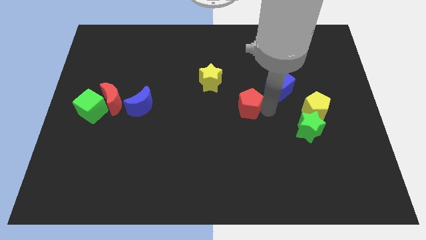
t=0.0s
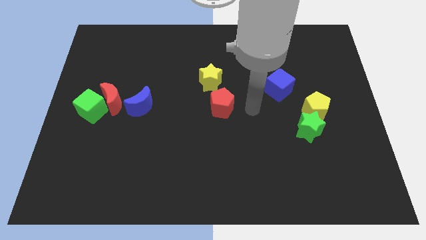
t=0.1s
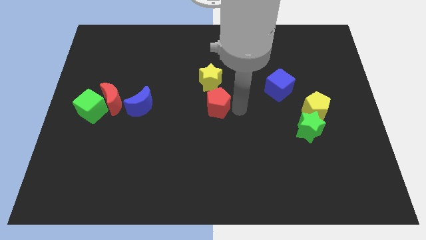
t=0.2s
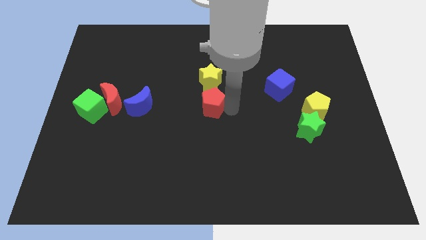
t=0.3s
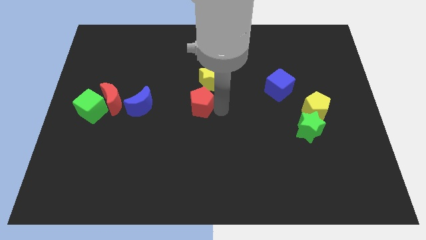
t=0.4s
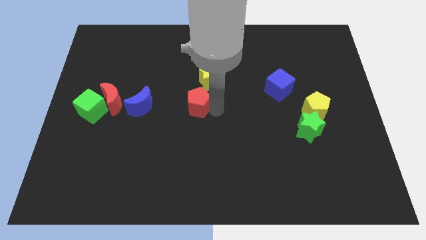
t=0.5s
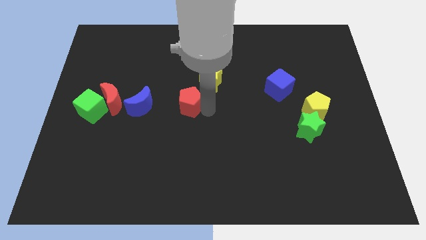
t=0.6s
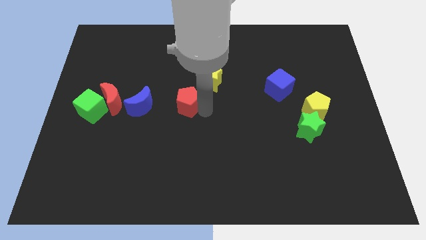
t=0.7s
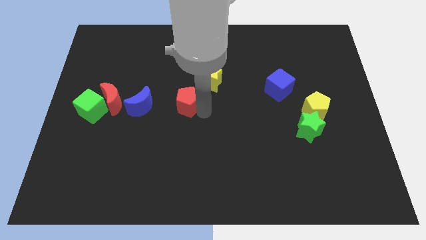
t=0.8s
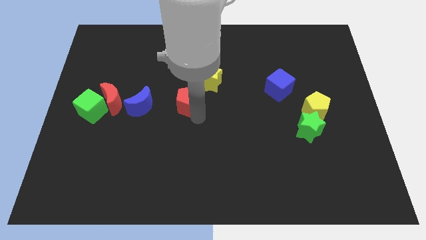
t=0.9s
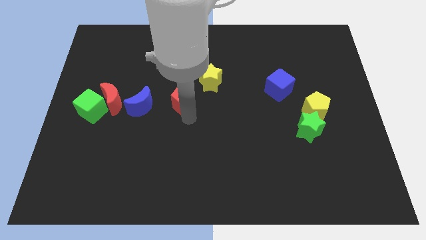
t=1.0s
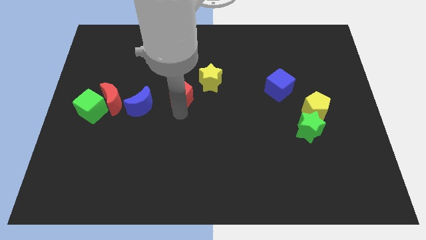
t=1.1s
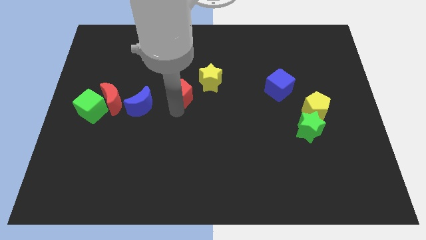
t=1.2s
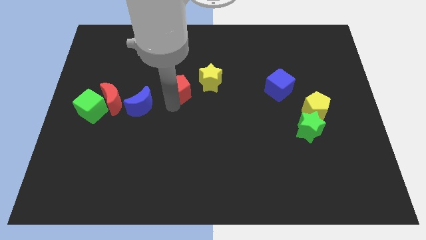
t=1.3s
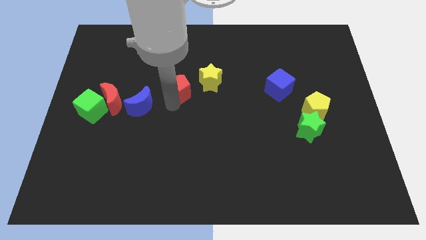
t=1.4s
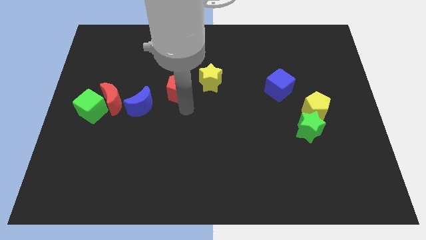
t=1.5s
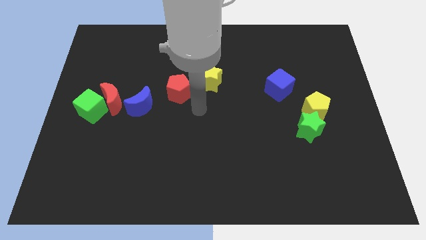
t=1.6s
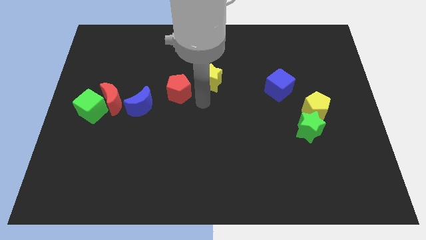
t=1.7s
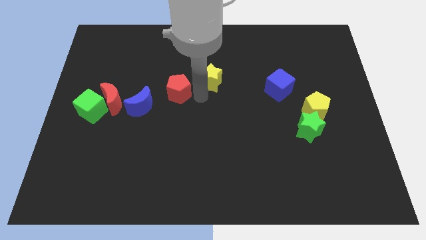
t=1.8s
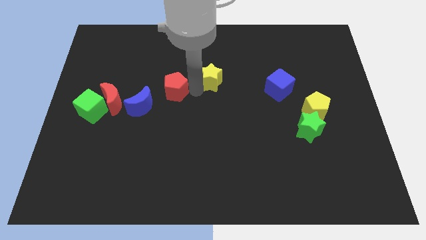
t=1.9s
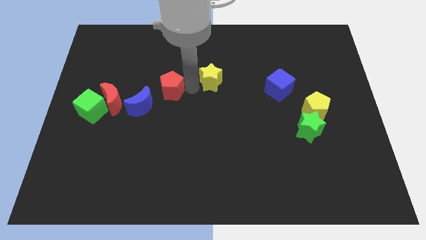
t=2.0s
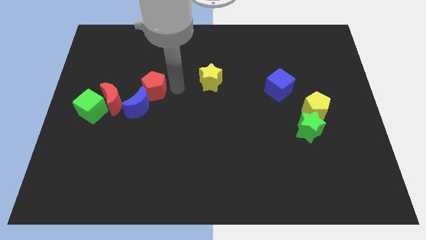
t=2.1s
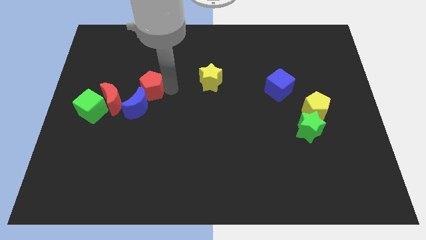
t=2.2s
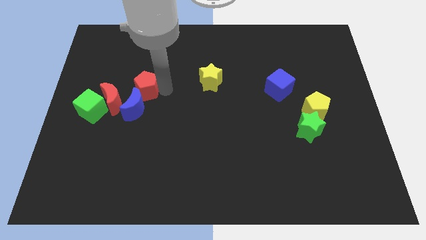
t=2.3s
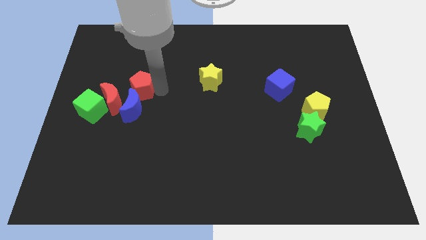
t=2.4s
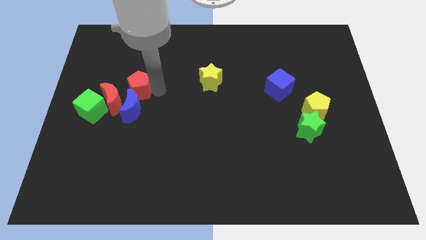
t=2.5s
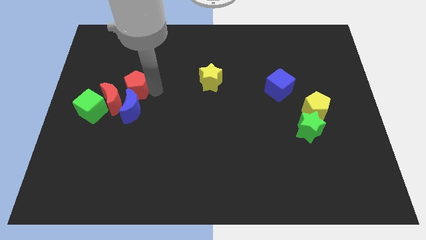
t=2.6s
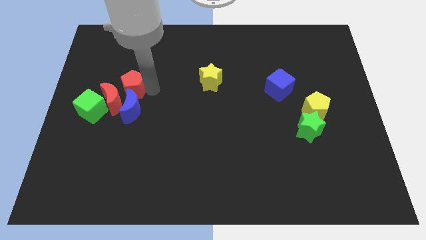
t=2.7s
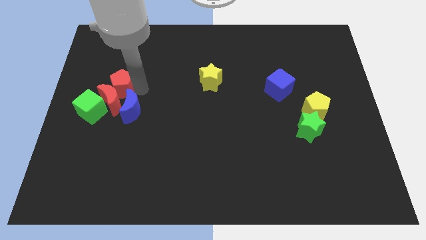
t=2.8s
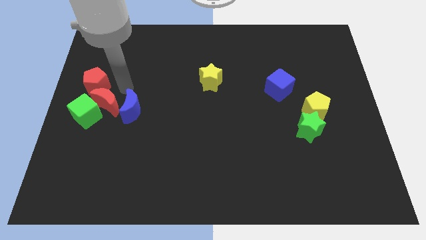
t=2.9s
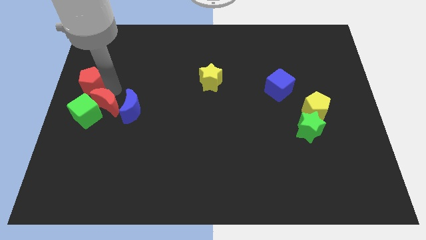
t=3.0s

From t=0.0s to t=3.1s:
put the red pentagon above the red moon

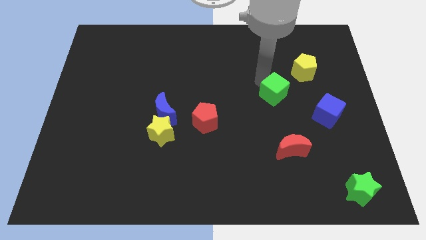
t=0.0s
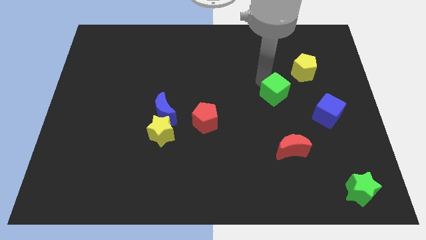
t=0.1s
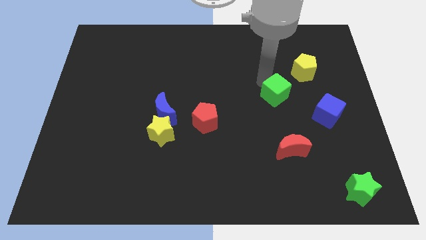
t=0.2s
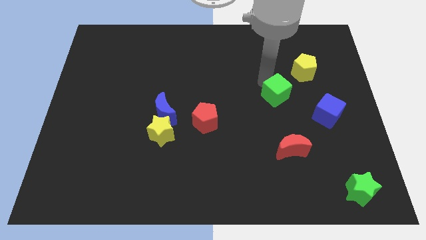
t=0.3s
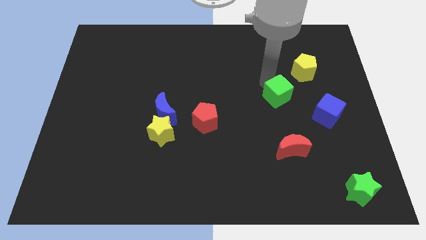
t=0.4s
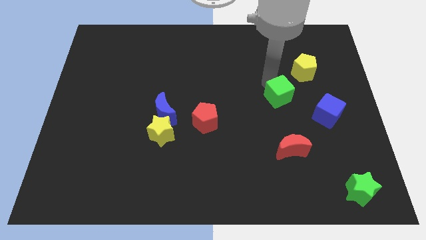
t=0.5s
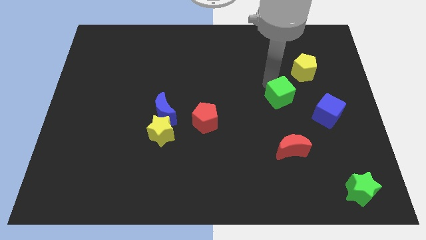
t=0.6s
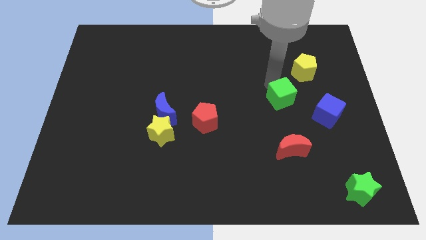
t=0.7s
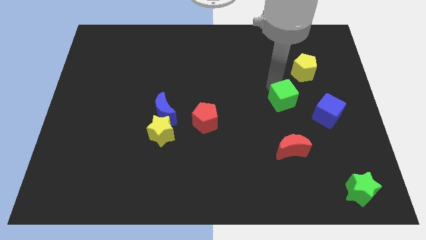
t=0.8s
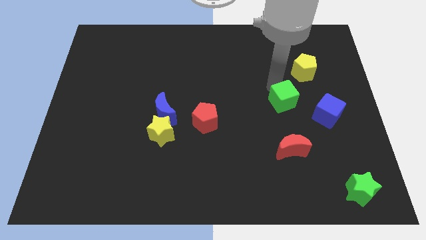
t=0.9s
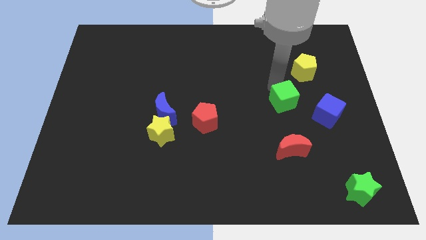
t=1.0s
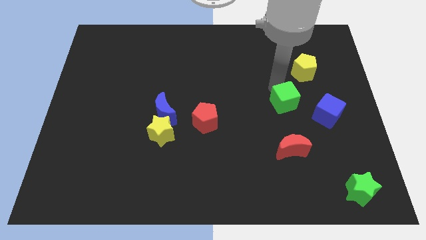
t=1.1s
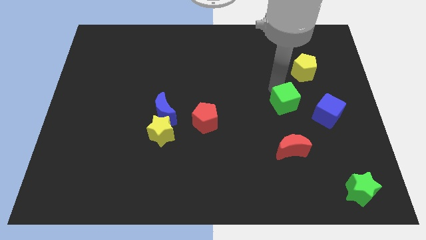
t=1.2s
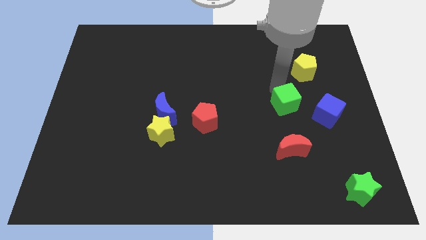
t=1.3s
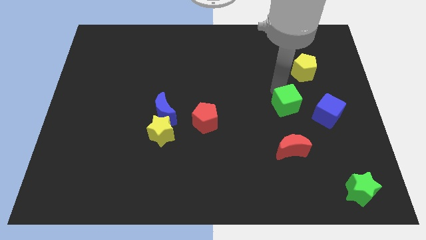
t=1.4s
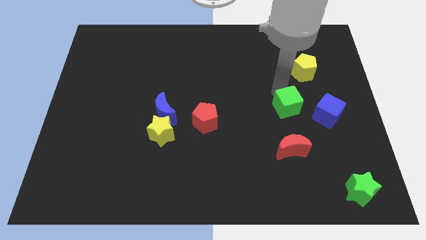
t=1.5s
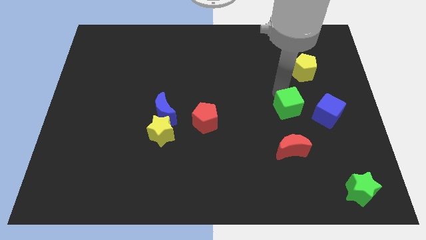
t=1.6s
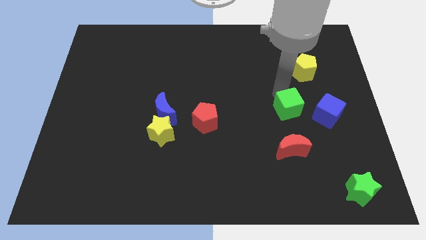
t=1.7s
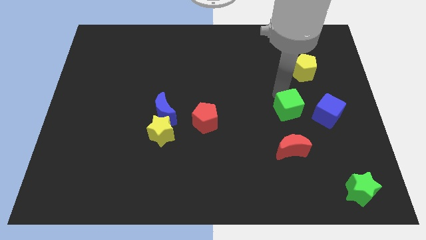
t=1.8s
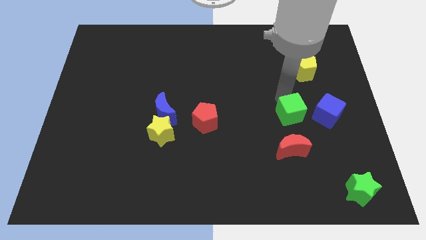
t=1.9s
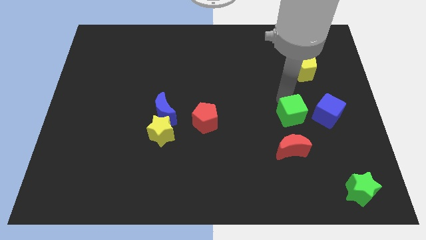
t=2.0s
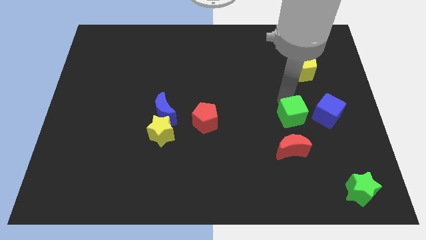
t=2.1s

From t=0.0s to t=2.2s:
push green cube to the left of blue cube

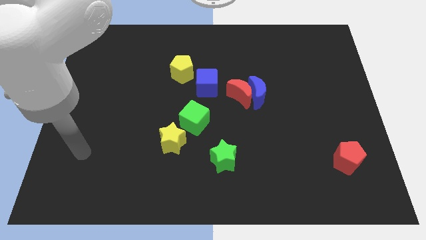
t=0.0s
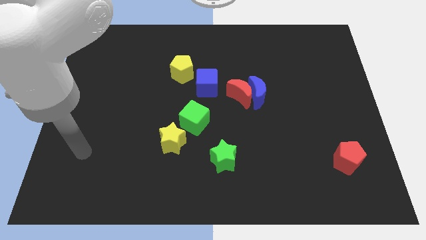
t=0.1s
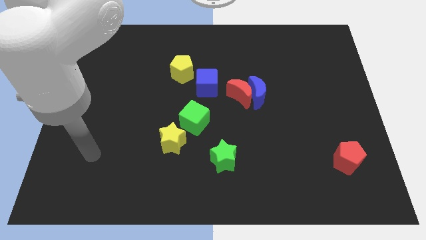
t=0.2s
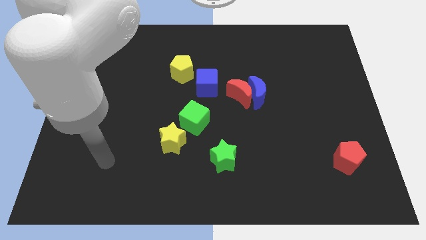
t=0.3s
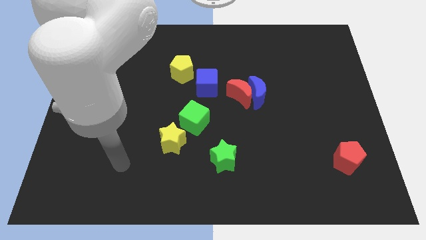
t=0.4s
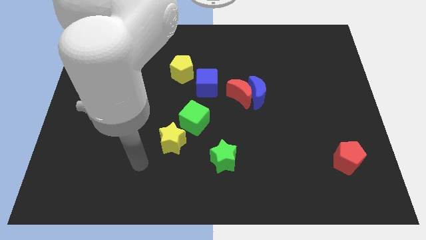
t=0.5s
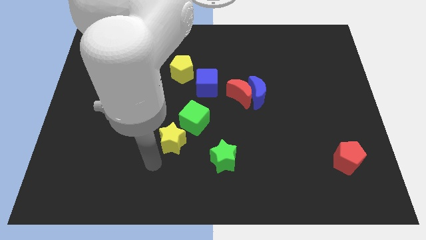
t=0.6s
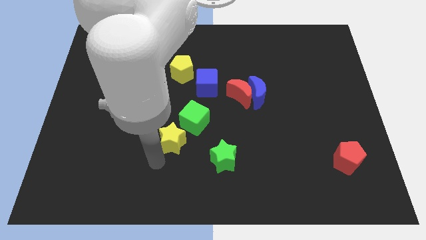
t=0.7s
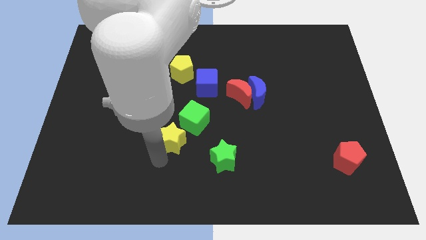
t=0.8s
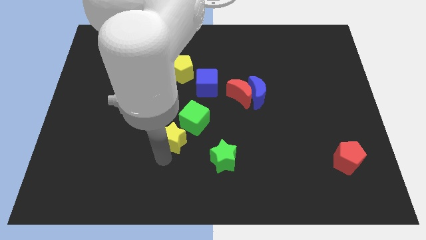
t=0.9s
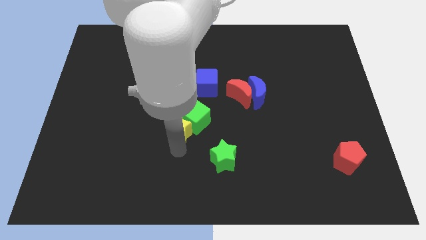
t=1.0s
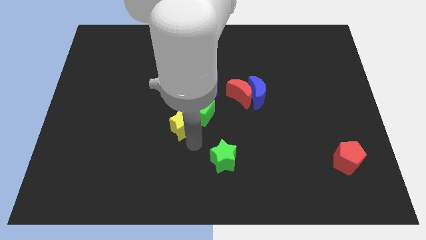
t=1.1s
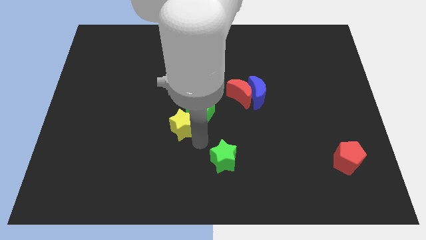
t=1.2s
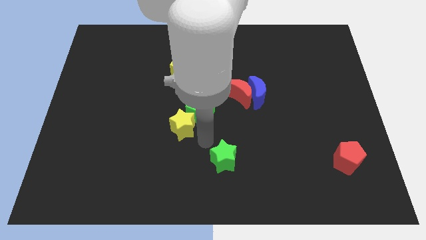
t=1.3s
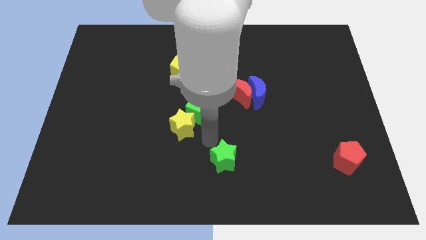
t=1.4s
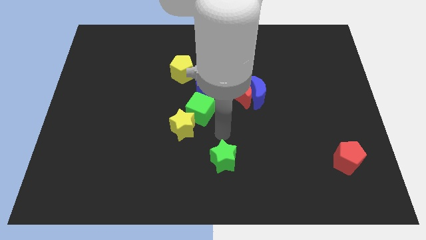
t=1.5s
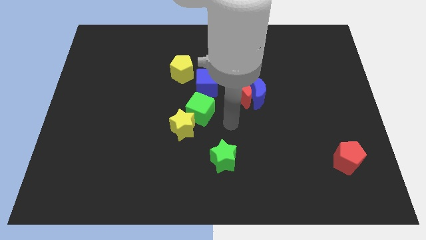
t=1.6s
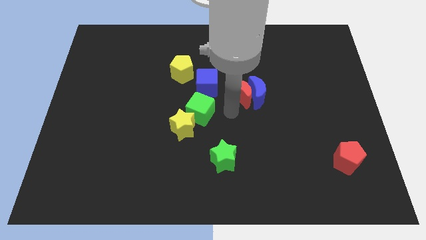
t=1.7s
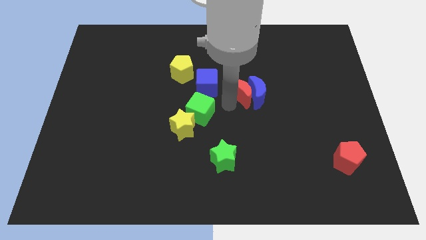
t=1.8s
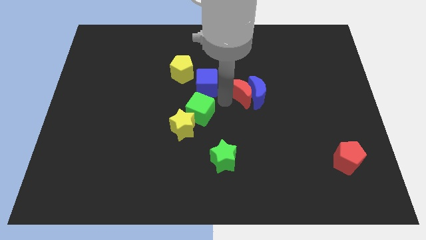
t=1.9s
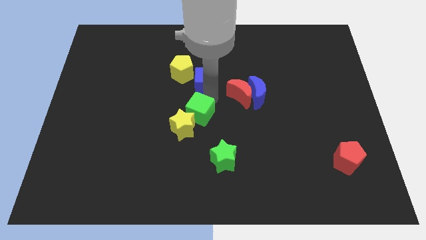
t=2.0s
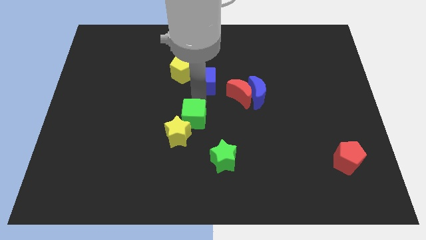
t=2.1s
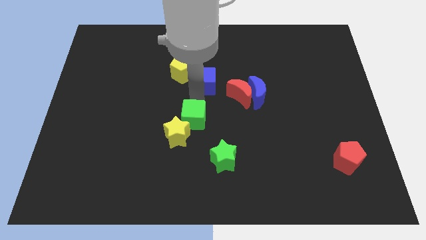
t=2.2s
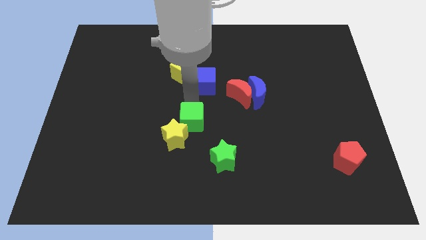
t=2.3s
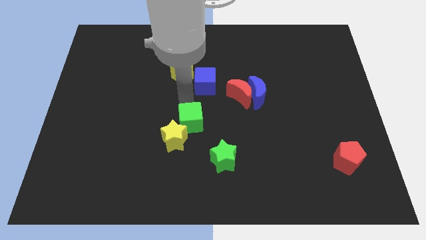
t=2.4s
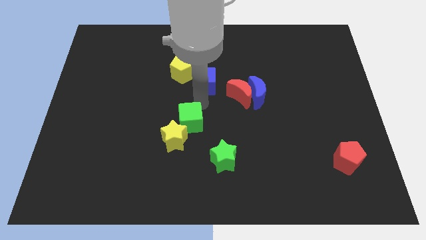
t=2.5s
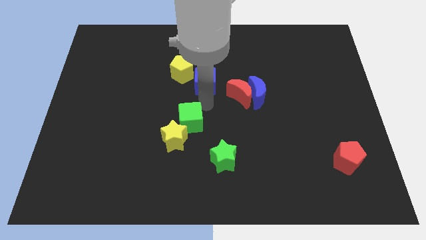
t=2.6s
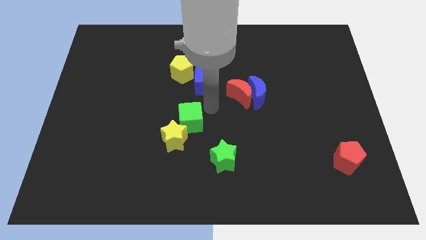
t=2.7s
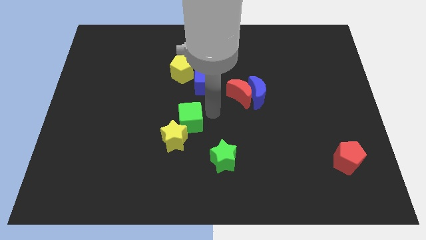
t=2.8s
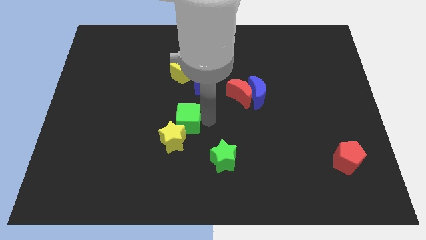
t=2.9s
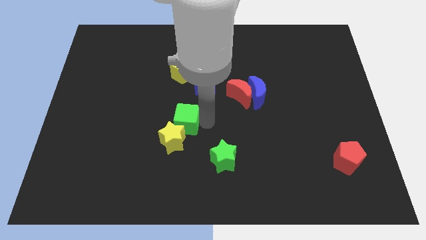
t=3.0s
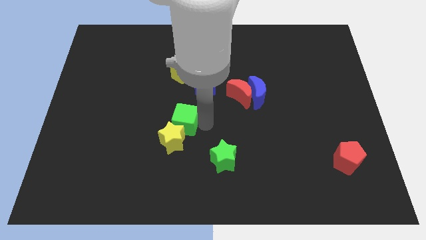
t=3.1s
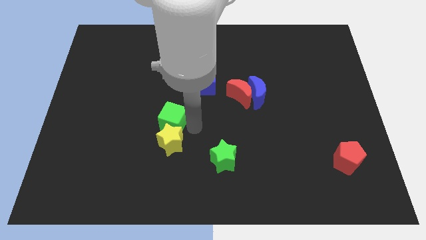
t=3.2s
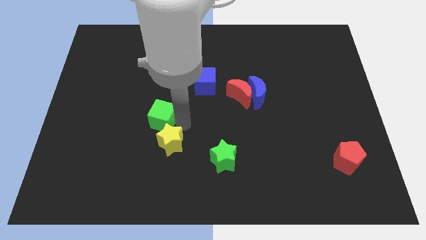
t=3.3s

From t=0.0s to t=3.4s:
push the yellow star towards the bottom center of the board with the help of the green cube

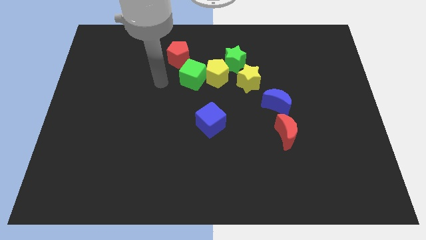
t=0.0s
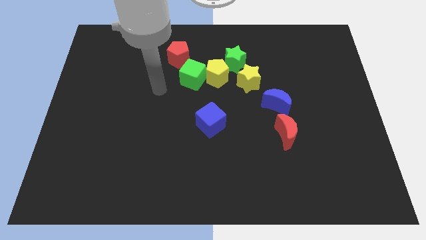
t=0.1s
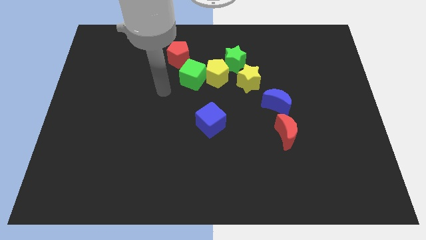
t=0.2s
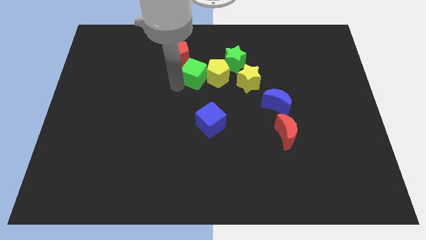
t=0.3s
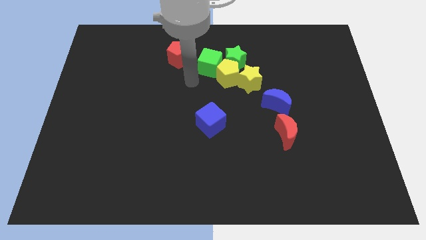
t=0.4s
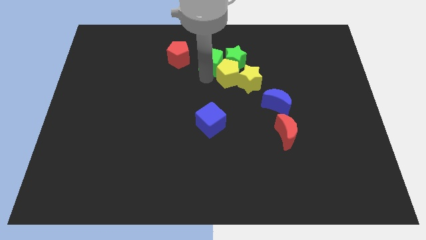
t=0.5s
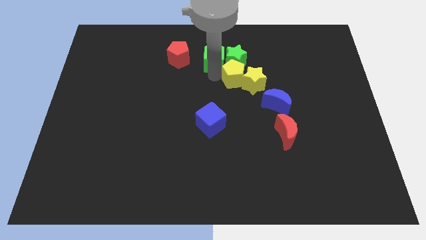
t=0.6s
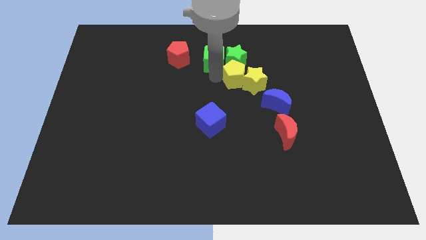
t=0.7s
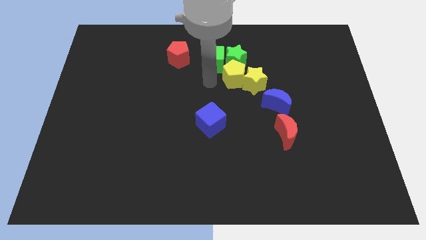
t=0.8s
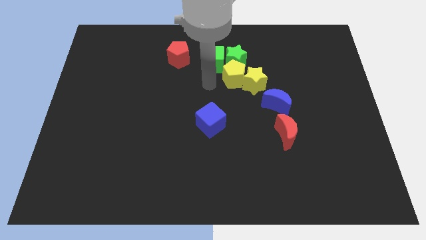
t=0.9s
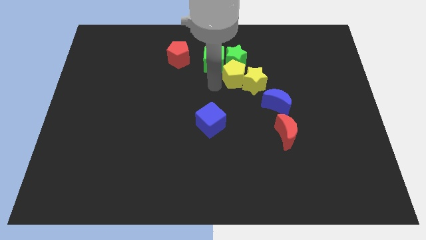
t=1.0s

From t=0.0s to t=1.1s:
move green cube to left of green star
